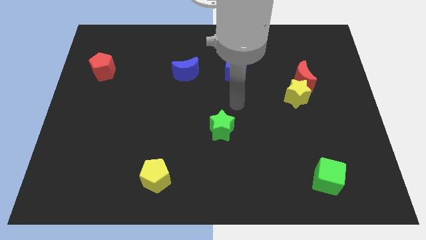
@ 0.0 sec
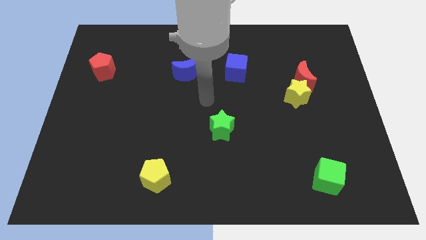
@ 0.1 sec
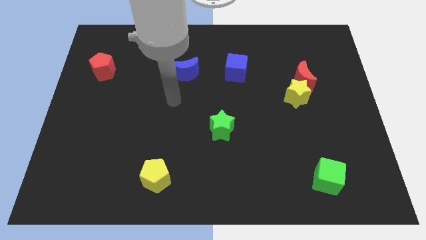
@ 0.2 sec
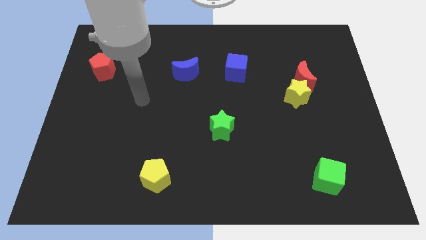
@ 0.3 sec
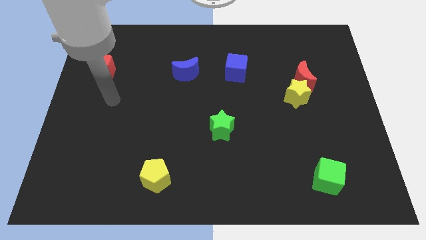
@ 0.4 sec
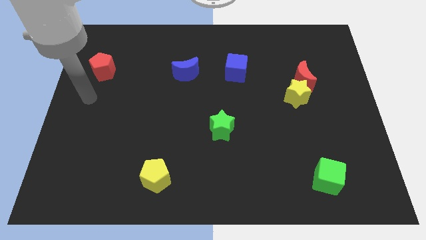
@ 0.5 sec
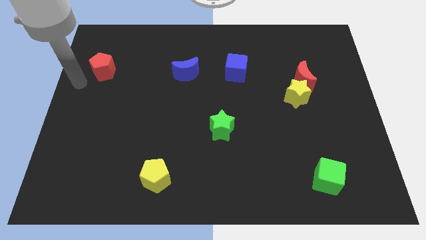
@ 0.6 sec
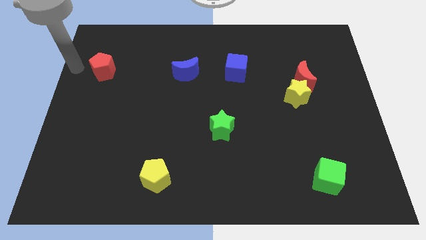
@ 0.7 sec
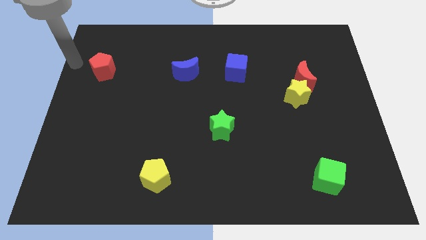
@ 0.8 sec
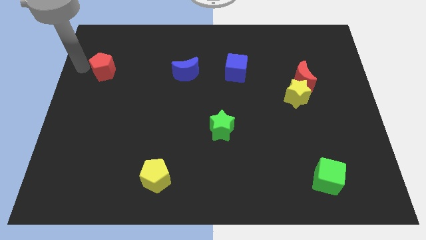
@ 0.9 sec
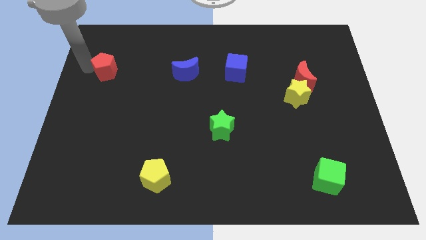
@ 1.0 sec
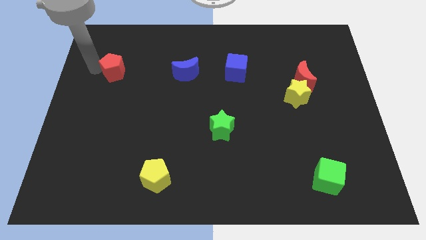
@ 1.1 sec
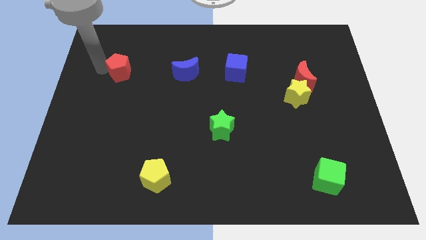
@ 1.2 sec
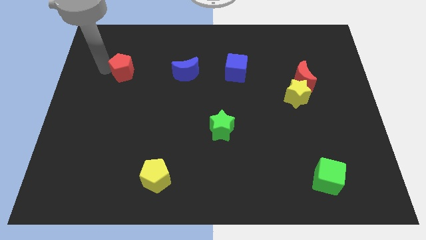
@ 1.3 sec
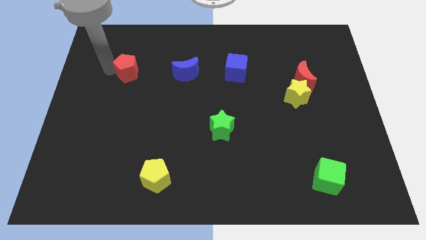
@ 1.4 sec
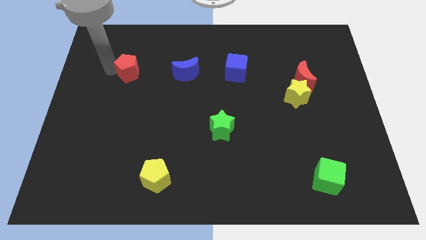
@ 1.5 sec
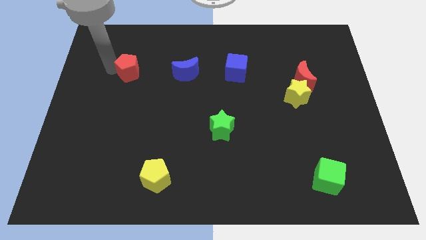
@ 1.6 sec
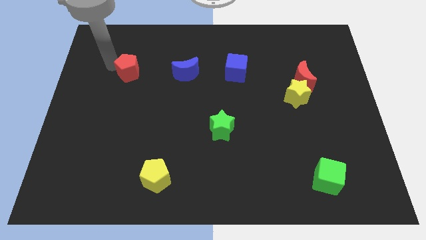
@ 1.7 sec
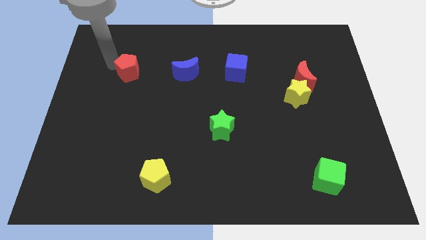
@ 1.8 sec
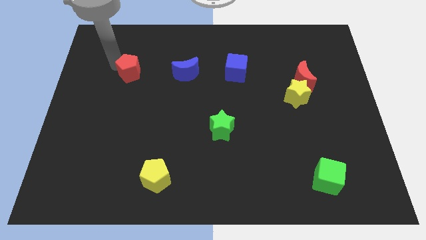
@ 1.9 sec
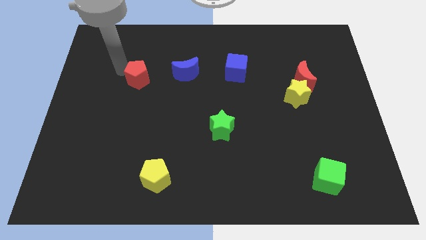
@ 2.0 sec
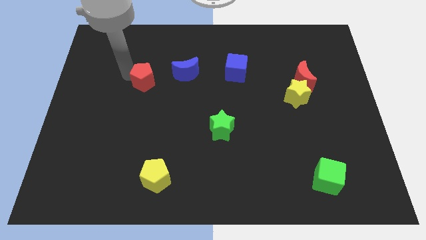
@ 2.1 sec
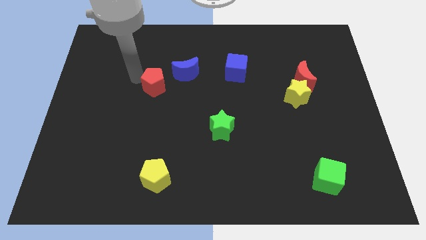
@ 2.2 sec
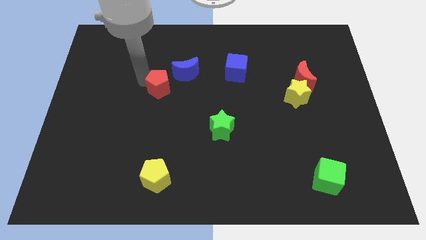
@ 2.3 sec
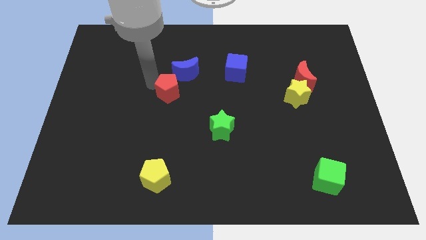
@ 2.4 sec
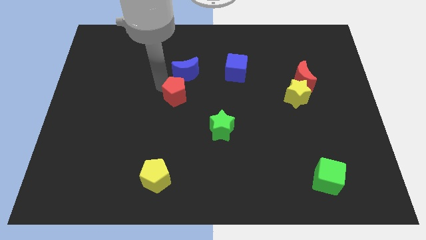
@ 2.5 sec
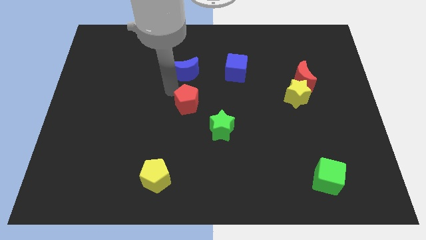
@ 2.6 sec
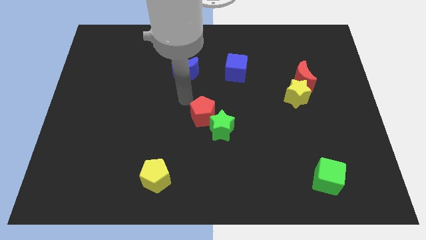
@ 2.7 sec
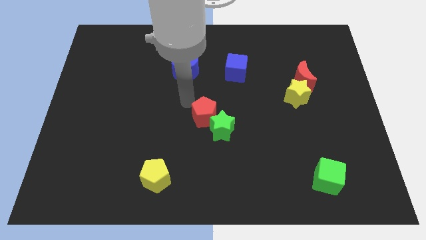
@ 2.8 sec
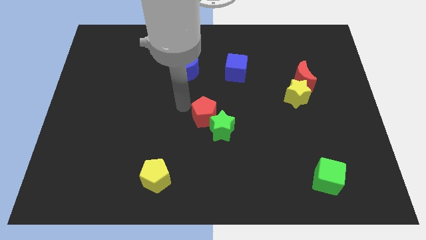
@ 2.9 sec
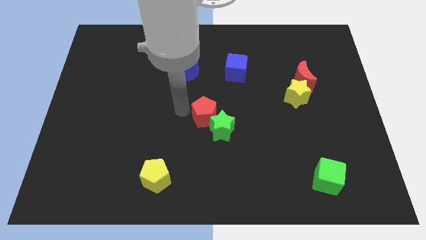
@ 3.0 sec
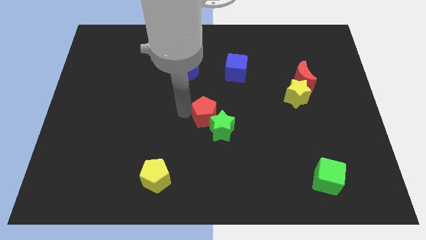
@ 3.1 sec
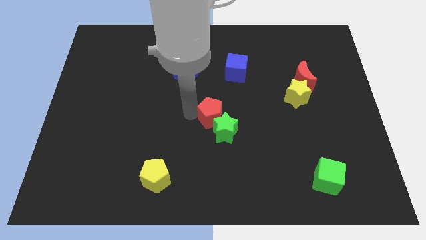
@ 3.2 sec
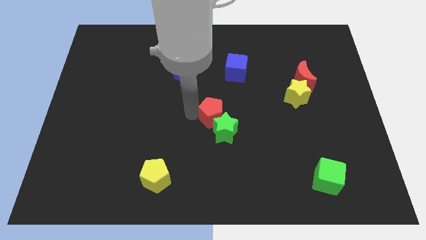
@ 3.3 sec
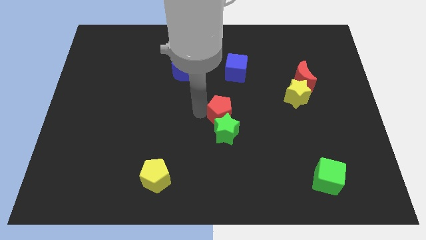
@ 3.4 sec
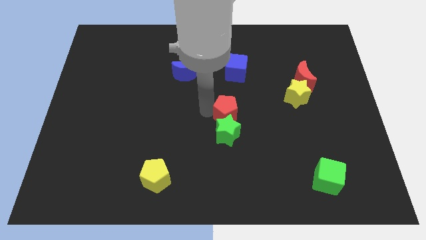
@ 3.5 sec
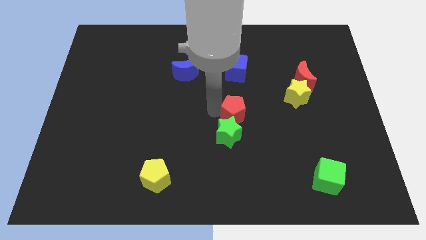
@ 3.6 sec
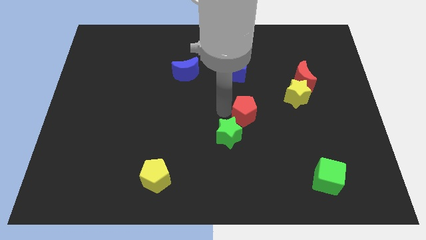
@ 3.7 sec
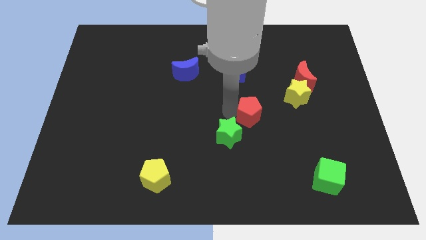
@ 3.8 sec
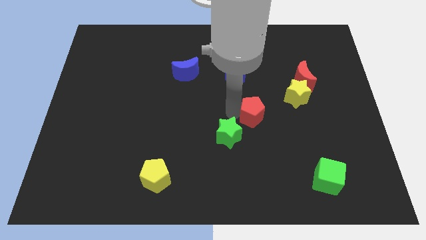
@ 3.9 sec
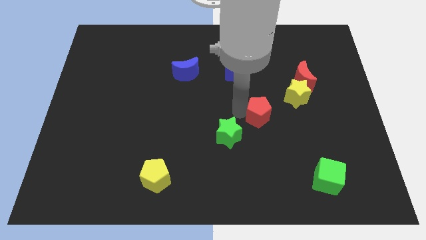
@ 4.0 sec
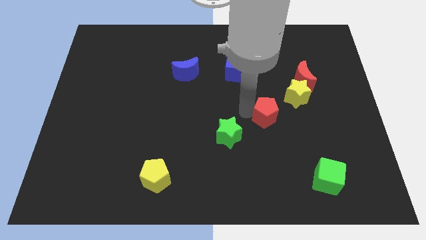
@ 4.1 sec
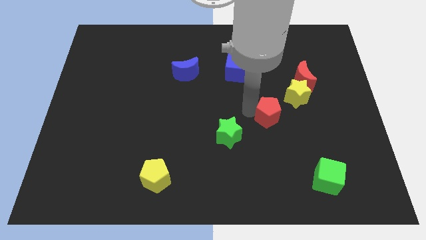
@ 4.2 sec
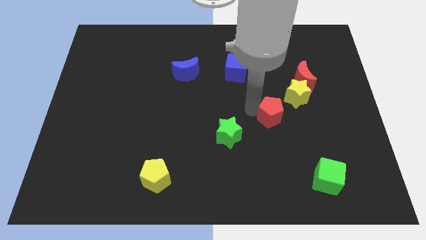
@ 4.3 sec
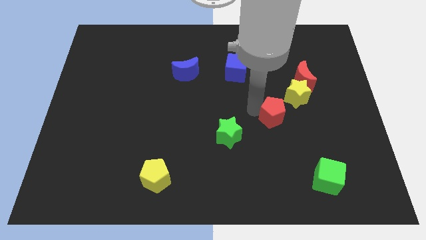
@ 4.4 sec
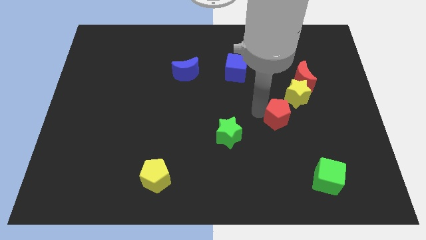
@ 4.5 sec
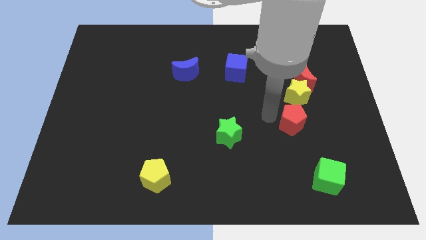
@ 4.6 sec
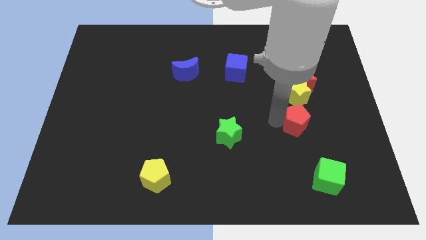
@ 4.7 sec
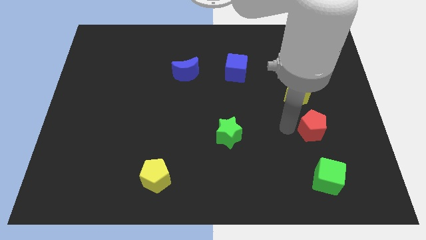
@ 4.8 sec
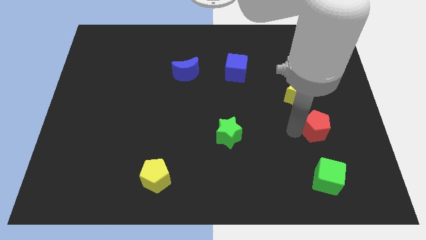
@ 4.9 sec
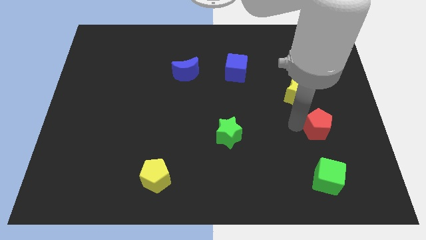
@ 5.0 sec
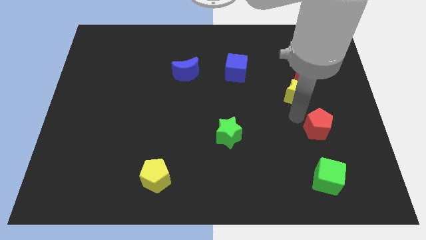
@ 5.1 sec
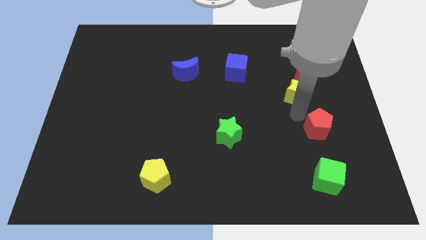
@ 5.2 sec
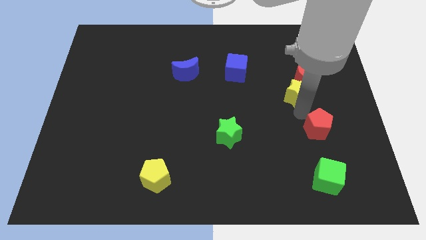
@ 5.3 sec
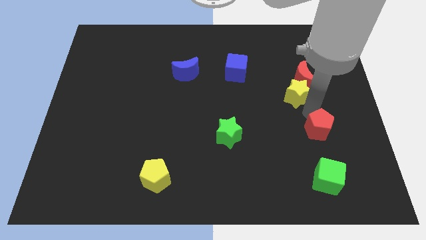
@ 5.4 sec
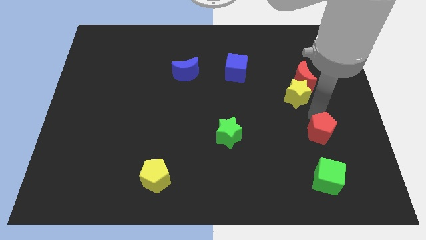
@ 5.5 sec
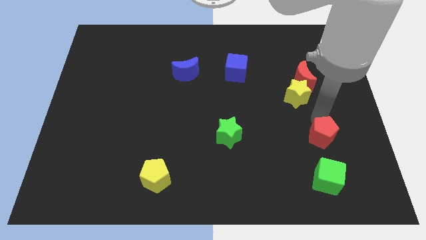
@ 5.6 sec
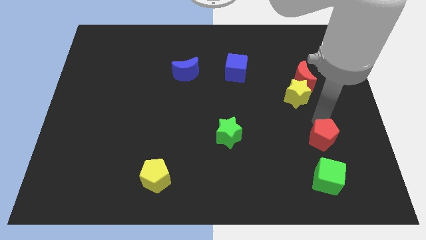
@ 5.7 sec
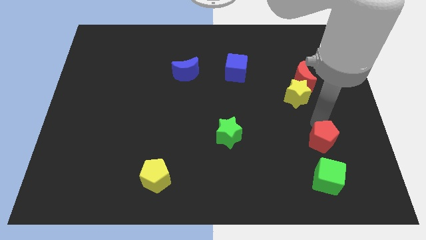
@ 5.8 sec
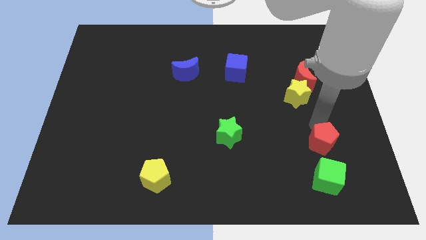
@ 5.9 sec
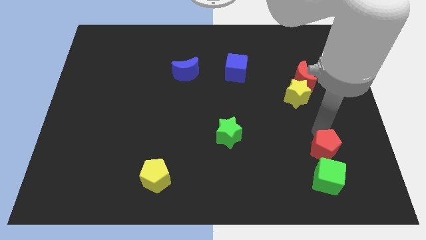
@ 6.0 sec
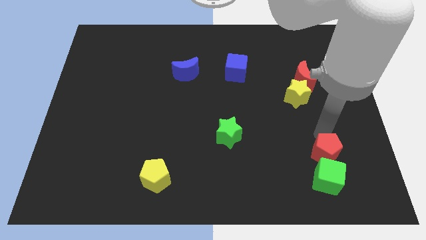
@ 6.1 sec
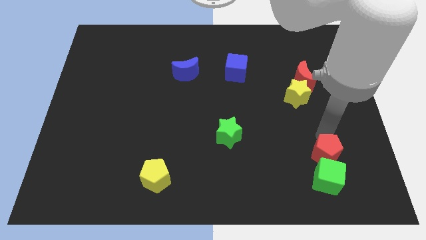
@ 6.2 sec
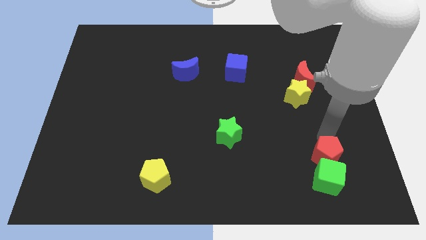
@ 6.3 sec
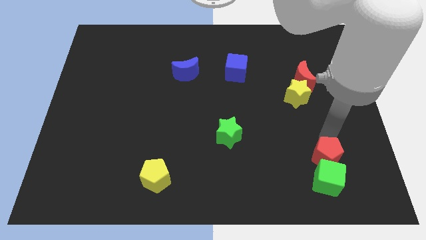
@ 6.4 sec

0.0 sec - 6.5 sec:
put the red pentagon towards the green cube

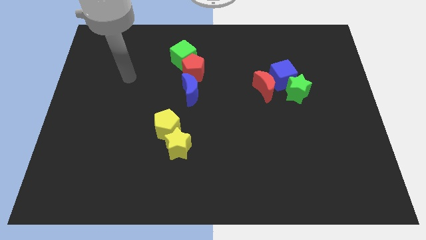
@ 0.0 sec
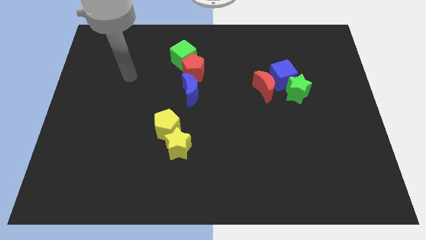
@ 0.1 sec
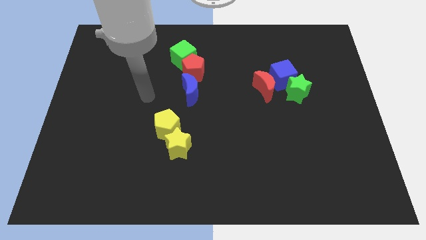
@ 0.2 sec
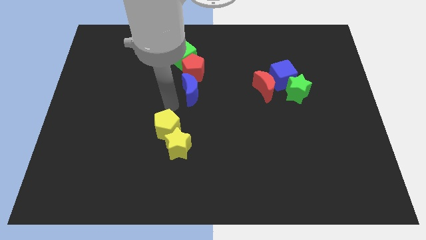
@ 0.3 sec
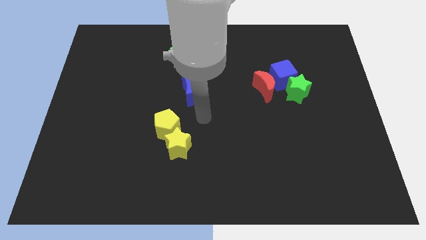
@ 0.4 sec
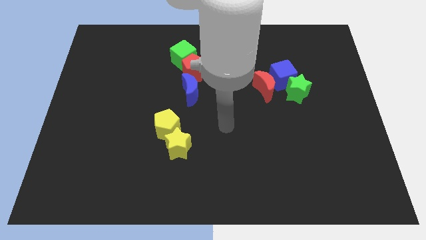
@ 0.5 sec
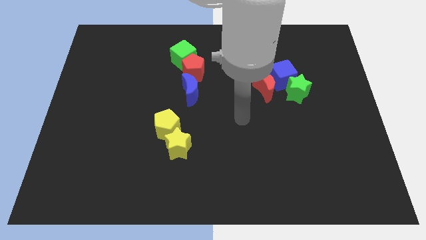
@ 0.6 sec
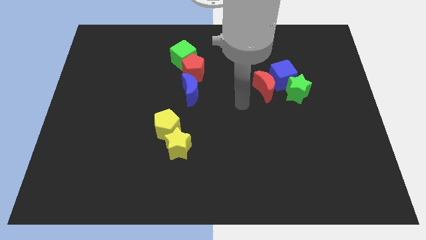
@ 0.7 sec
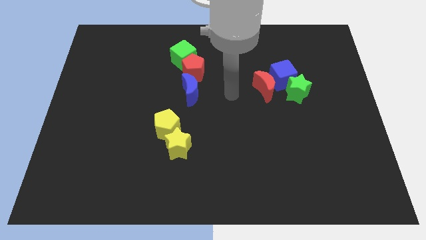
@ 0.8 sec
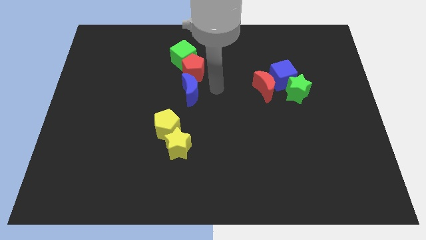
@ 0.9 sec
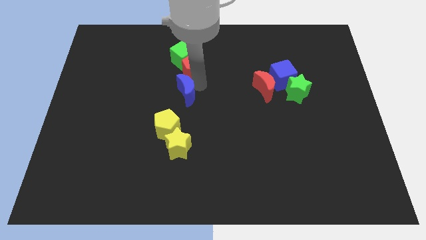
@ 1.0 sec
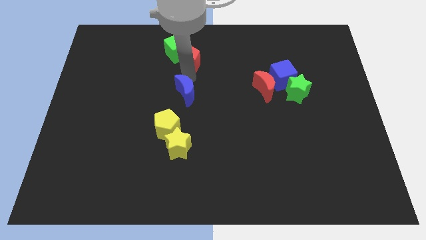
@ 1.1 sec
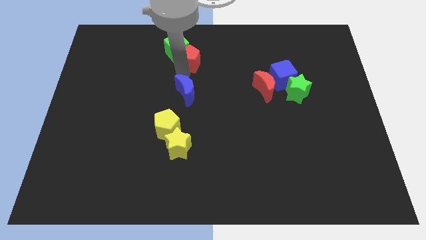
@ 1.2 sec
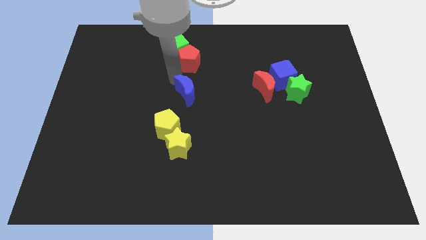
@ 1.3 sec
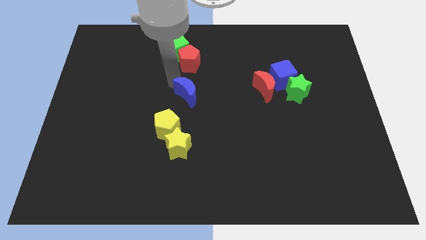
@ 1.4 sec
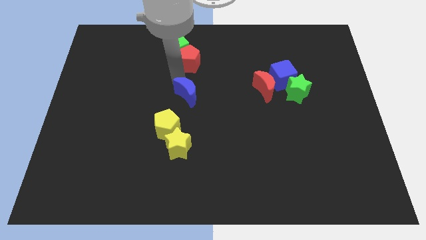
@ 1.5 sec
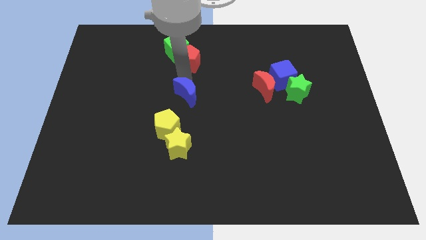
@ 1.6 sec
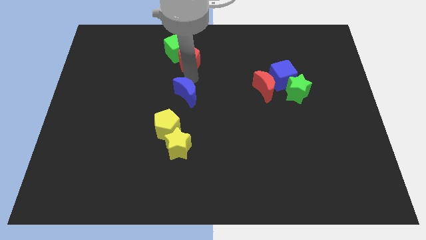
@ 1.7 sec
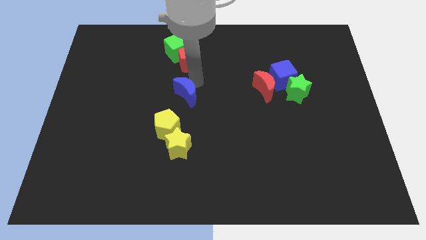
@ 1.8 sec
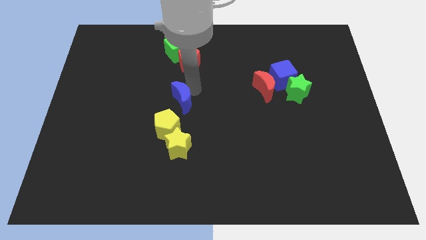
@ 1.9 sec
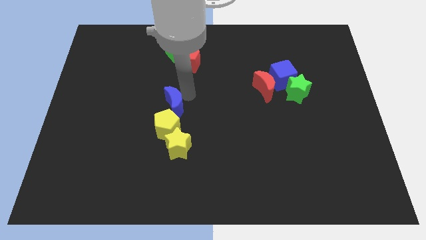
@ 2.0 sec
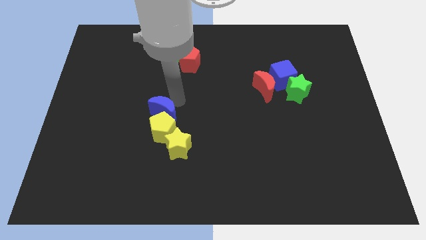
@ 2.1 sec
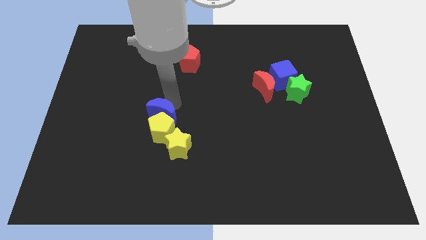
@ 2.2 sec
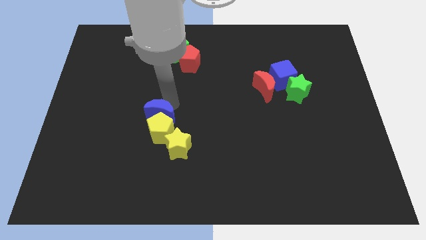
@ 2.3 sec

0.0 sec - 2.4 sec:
push the blue moon towards the yellow pentagon
